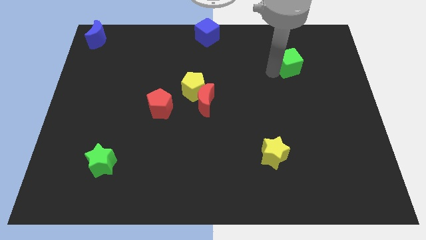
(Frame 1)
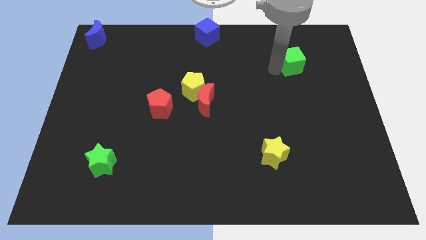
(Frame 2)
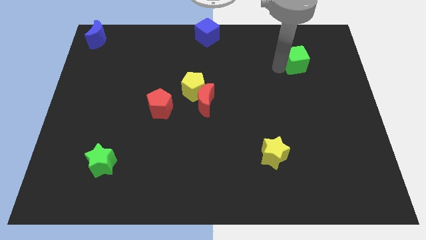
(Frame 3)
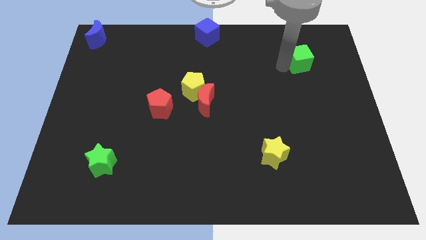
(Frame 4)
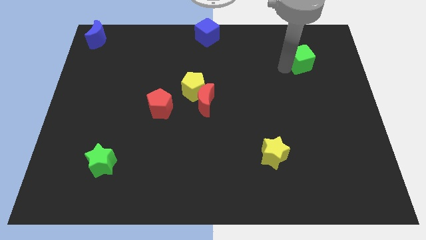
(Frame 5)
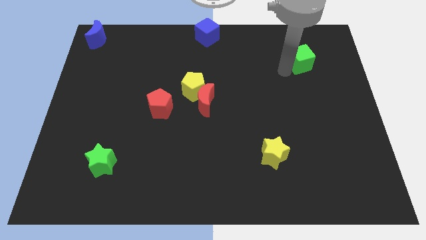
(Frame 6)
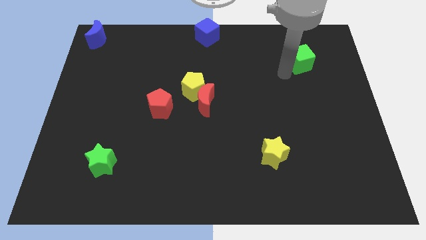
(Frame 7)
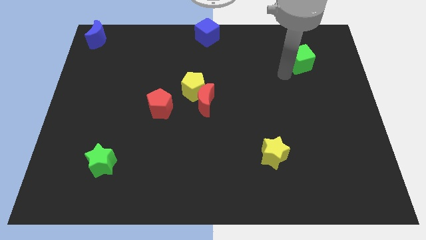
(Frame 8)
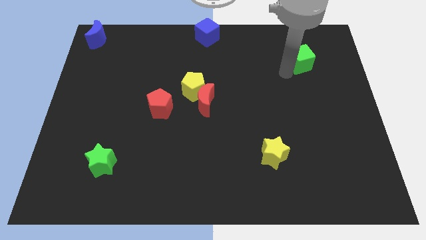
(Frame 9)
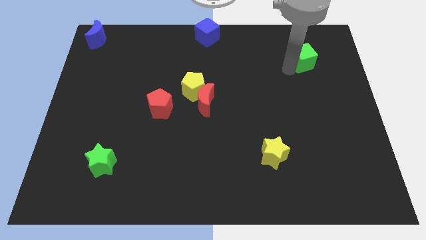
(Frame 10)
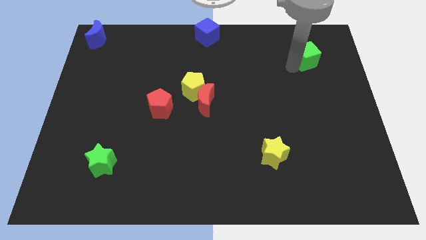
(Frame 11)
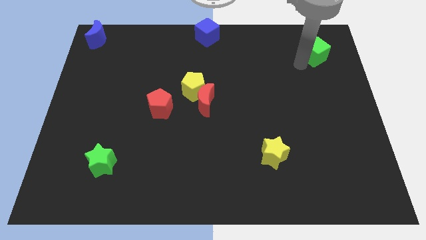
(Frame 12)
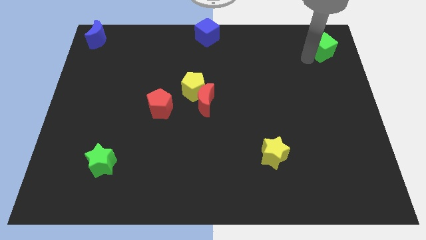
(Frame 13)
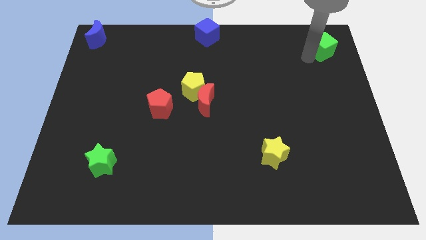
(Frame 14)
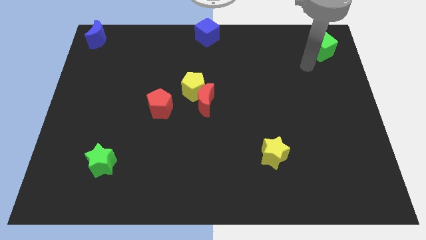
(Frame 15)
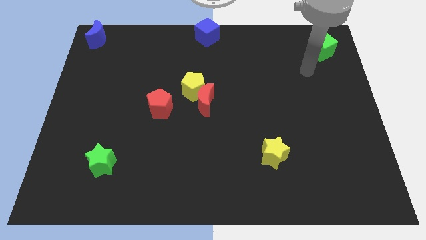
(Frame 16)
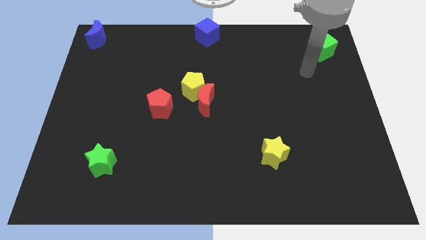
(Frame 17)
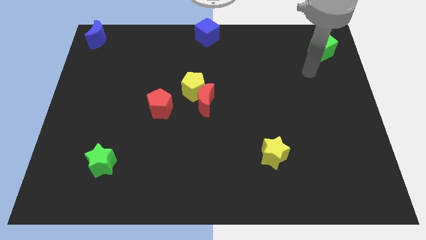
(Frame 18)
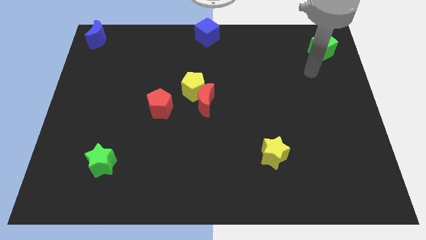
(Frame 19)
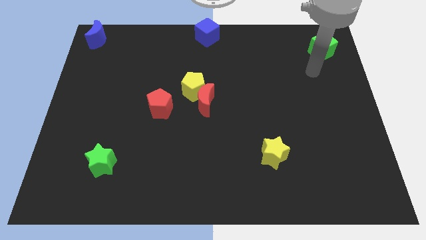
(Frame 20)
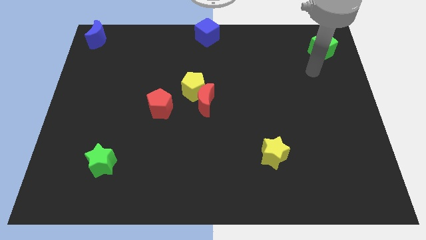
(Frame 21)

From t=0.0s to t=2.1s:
push green cube towards top right of the board

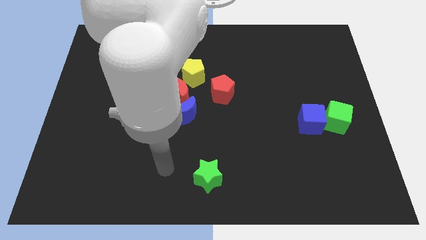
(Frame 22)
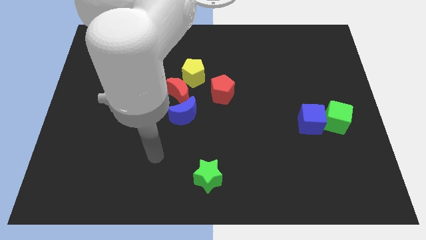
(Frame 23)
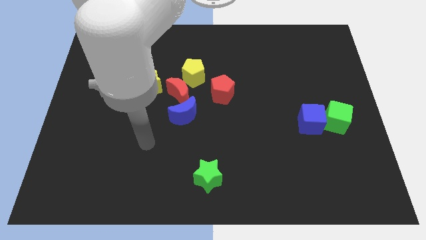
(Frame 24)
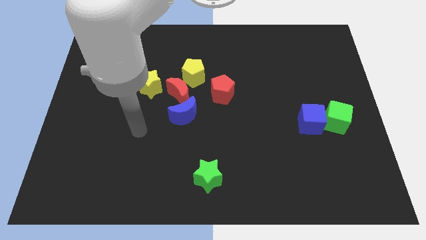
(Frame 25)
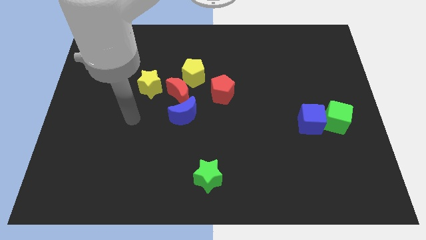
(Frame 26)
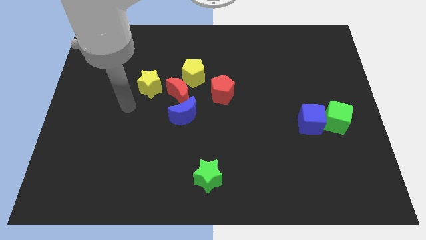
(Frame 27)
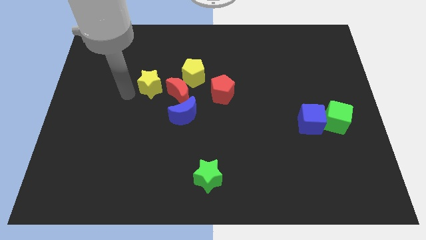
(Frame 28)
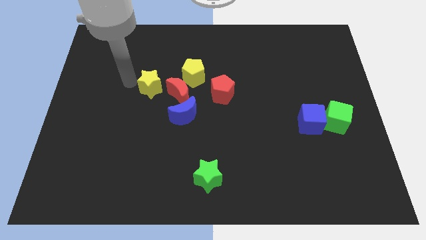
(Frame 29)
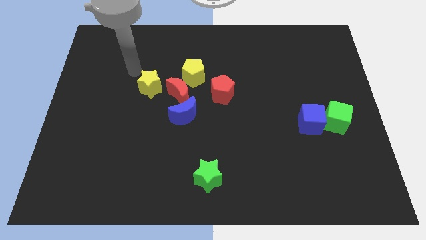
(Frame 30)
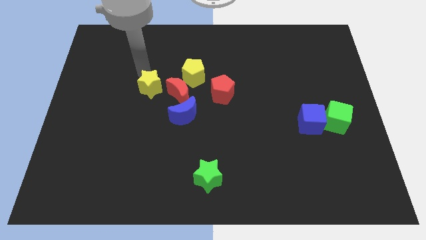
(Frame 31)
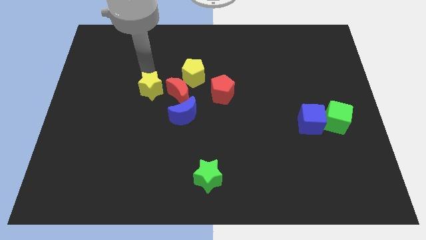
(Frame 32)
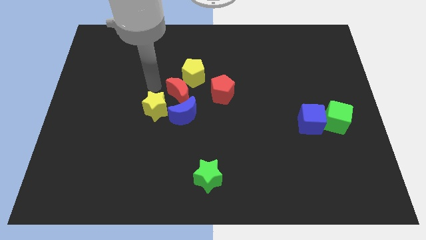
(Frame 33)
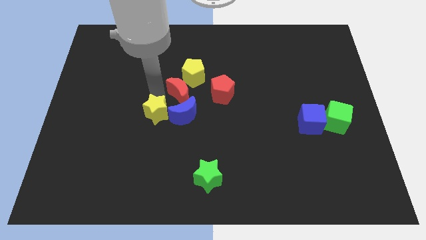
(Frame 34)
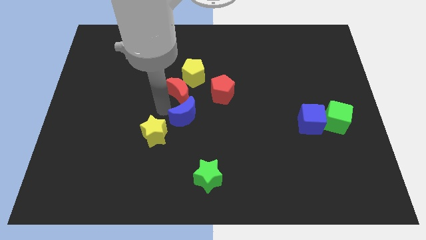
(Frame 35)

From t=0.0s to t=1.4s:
push the yellow star to the left of the blue moon

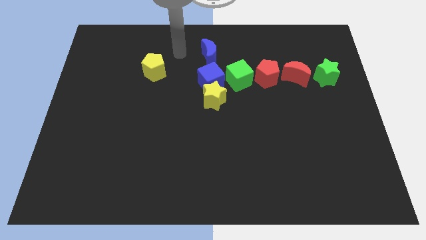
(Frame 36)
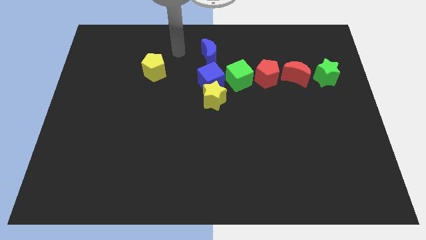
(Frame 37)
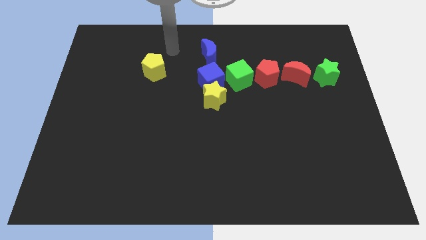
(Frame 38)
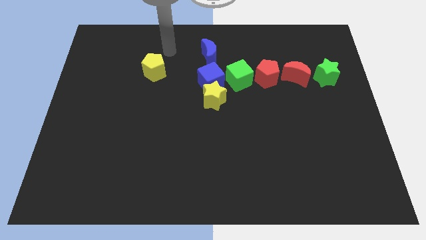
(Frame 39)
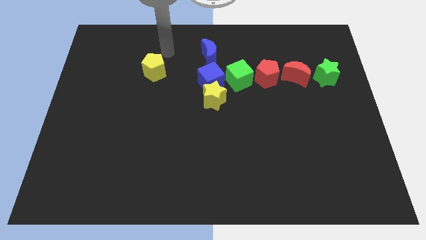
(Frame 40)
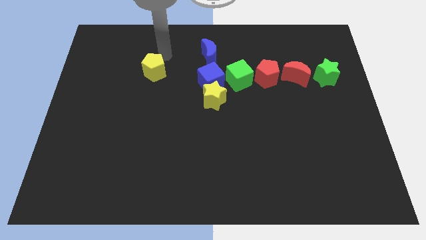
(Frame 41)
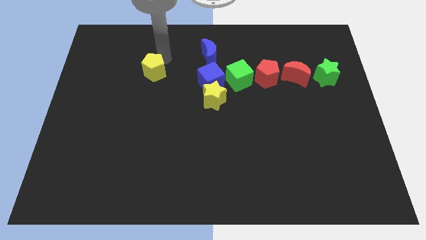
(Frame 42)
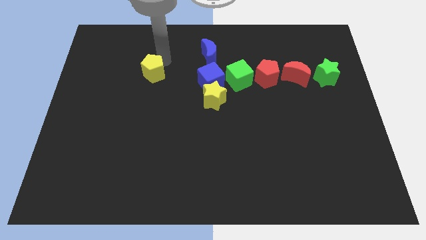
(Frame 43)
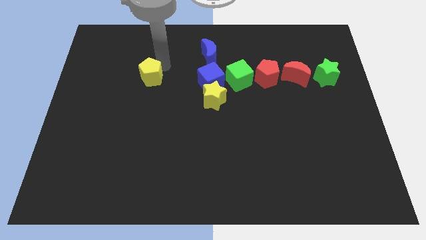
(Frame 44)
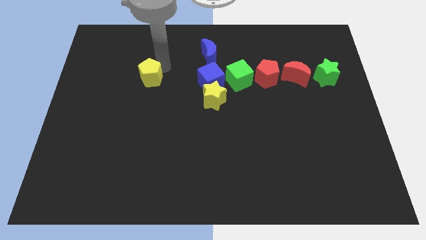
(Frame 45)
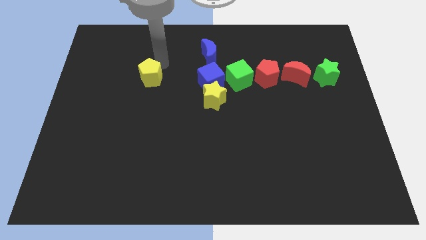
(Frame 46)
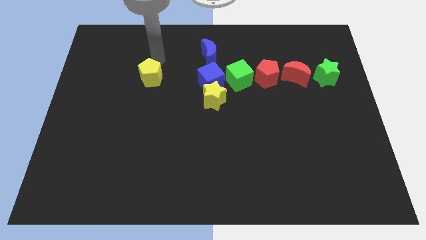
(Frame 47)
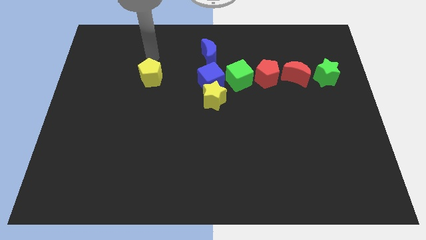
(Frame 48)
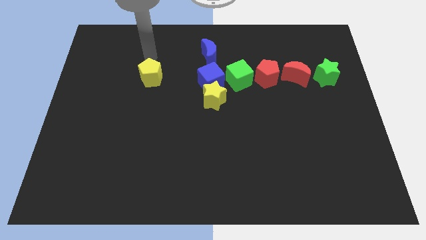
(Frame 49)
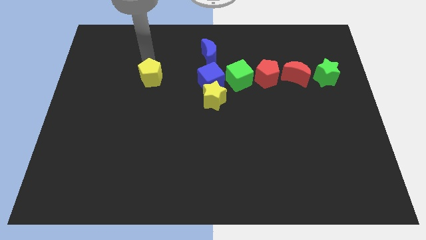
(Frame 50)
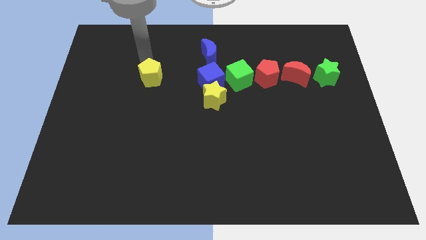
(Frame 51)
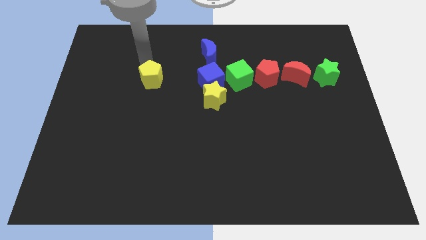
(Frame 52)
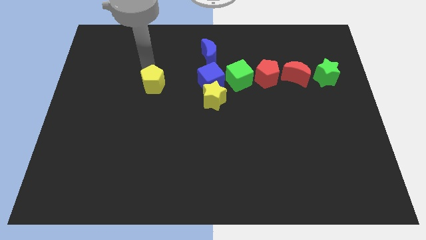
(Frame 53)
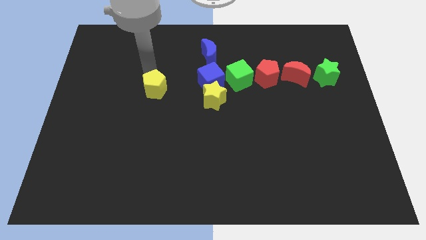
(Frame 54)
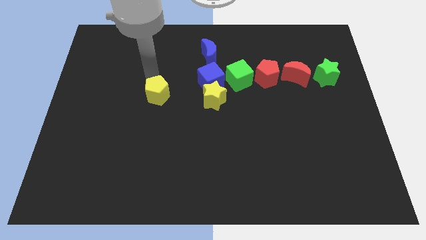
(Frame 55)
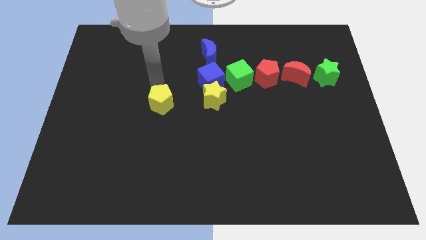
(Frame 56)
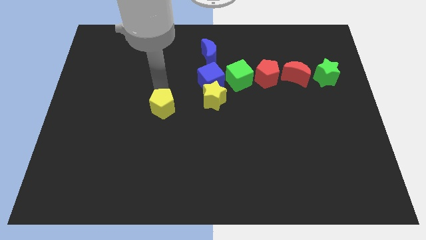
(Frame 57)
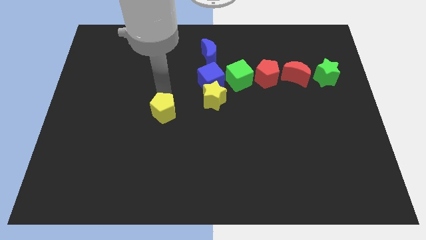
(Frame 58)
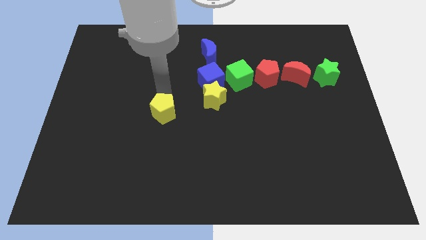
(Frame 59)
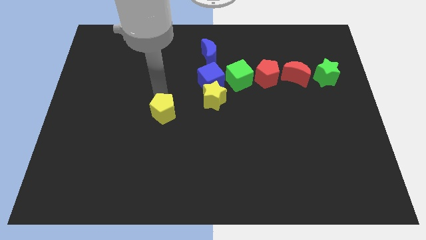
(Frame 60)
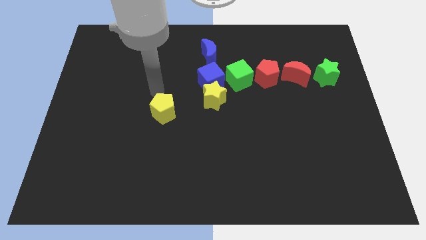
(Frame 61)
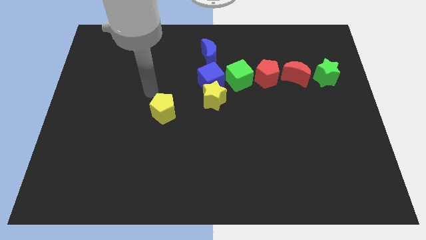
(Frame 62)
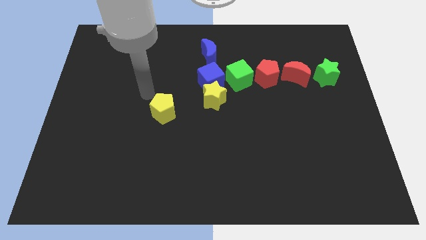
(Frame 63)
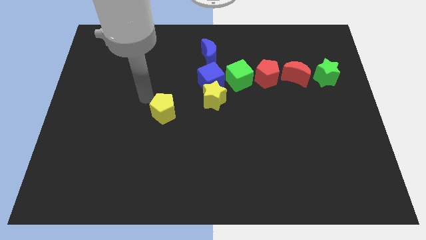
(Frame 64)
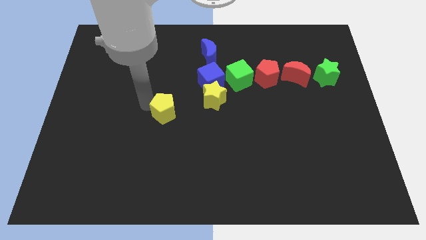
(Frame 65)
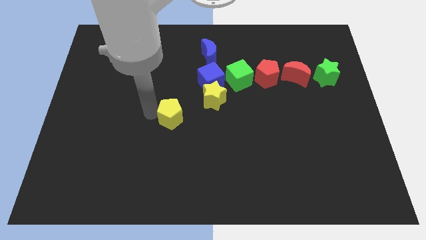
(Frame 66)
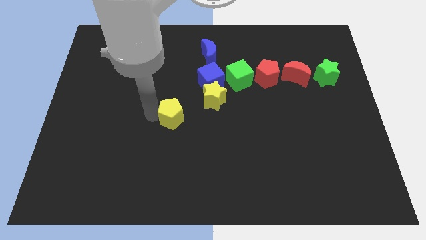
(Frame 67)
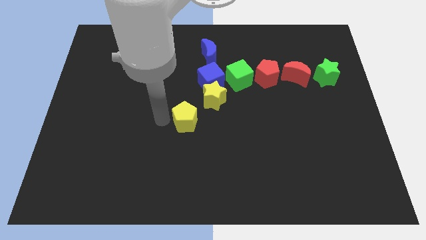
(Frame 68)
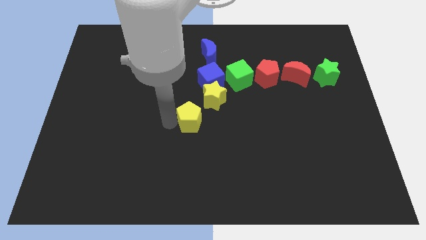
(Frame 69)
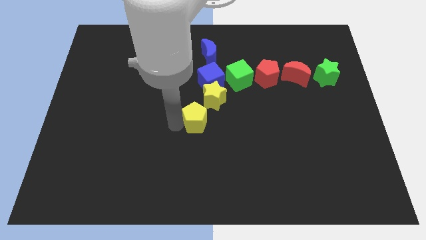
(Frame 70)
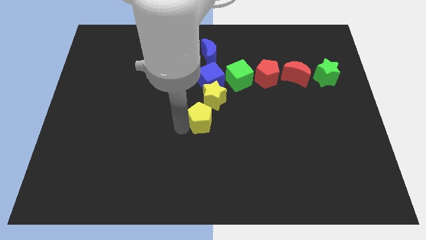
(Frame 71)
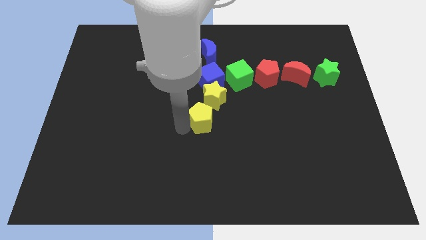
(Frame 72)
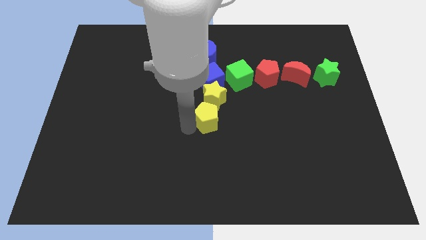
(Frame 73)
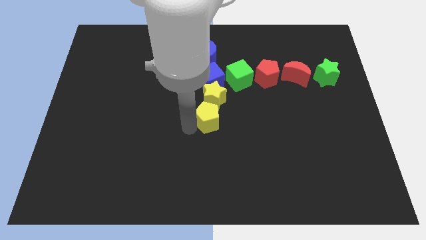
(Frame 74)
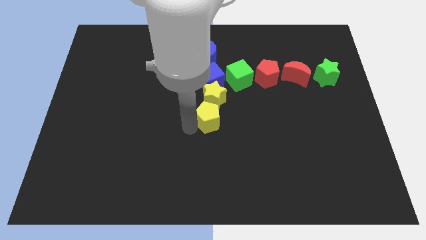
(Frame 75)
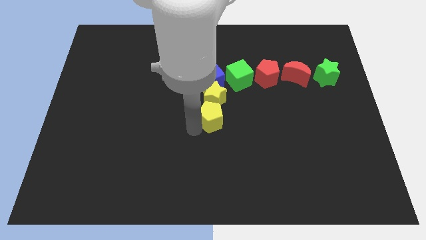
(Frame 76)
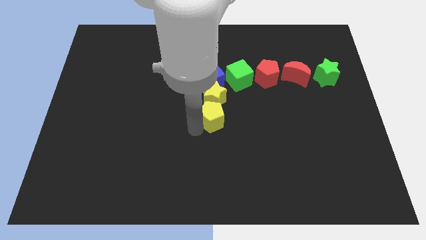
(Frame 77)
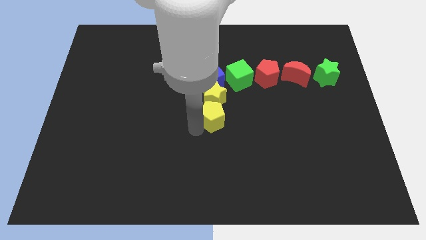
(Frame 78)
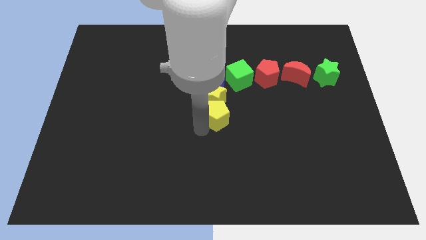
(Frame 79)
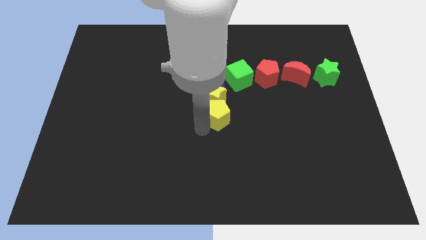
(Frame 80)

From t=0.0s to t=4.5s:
push the yellow pentagon to the bottom side of the yellow star

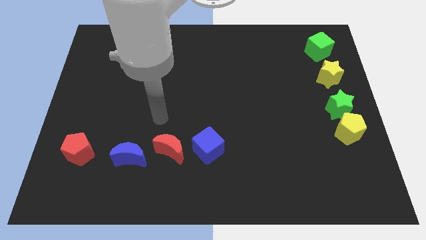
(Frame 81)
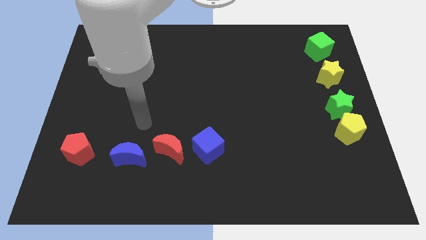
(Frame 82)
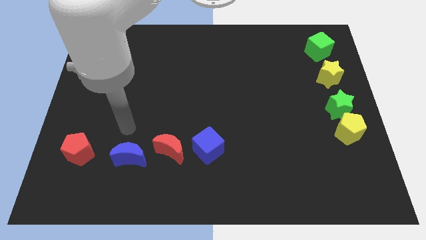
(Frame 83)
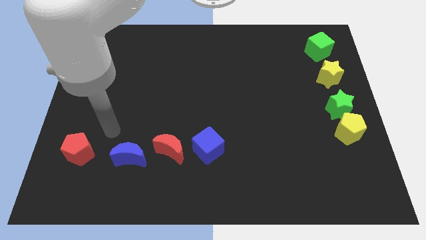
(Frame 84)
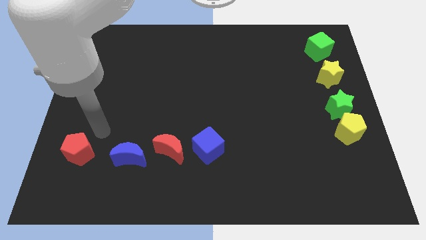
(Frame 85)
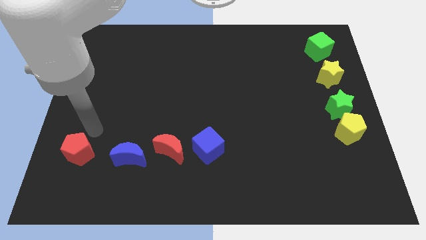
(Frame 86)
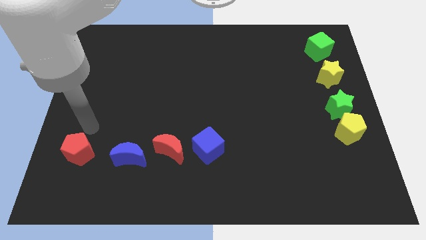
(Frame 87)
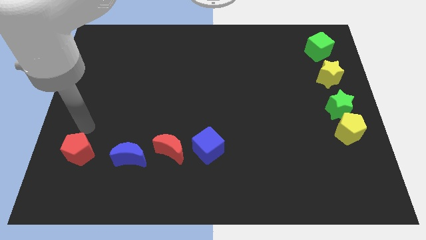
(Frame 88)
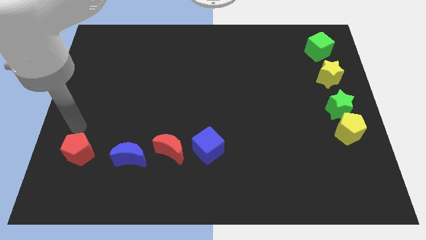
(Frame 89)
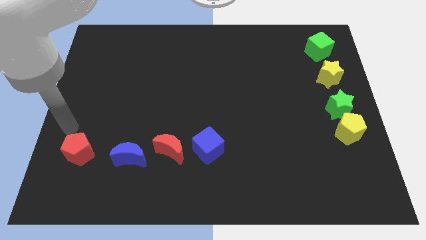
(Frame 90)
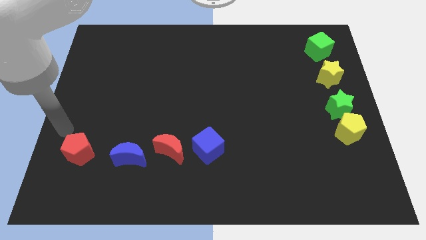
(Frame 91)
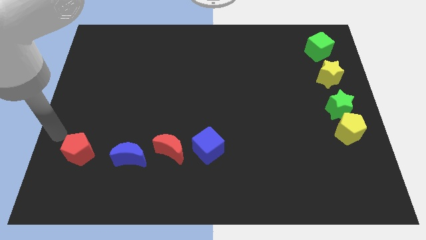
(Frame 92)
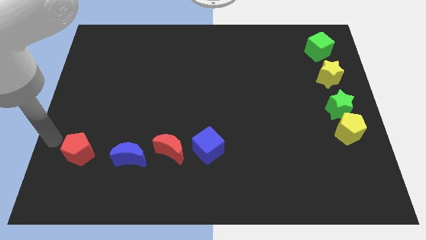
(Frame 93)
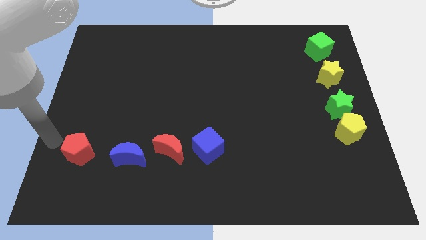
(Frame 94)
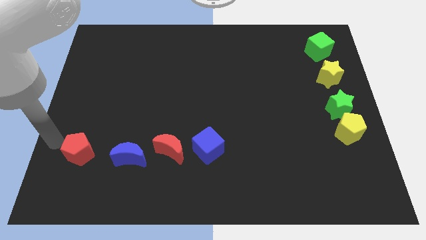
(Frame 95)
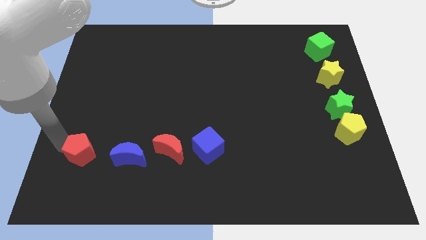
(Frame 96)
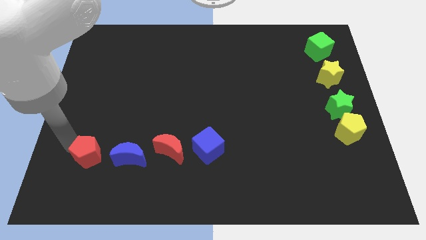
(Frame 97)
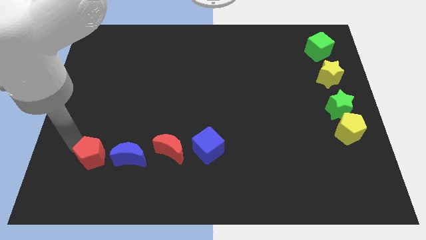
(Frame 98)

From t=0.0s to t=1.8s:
push the red pentagon close to the blue crescent
